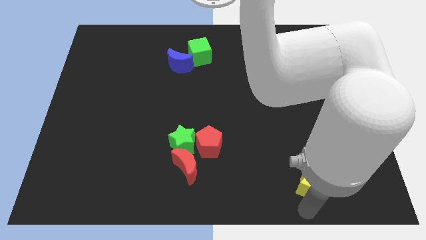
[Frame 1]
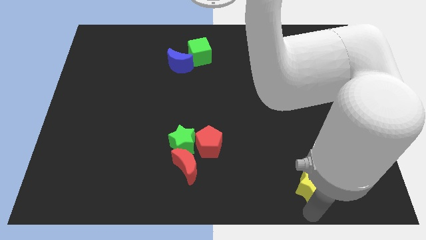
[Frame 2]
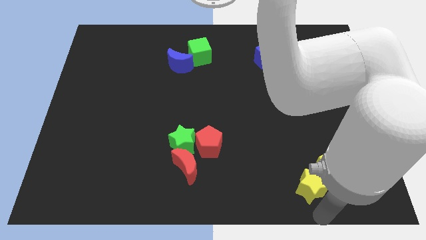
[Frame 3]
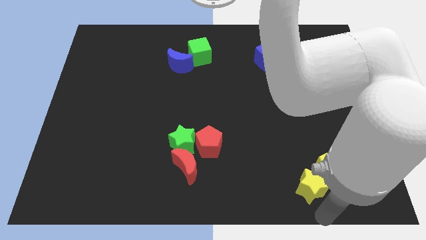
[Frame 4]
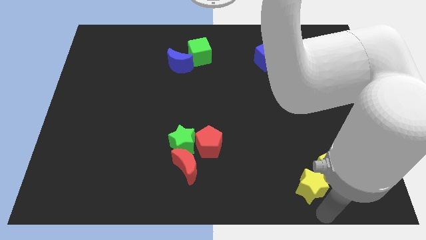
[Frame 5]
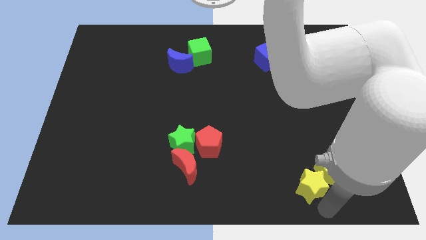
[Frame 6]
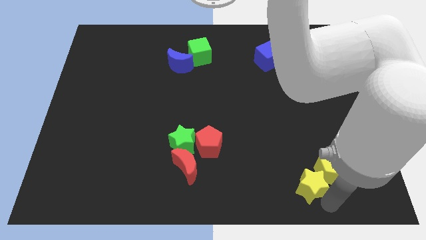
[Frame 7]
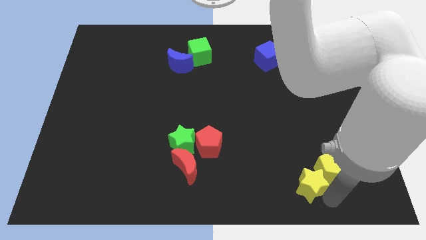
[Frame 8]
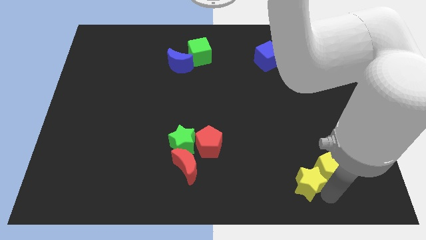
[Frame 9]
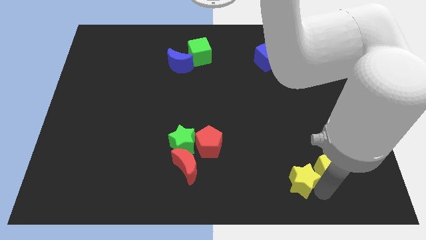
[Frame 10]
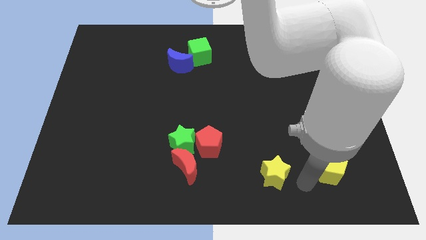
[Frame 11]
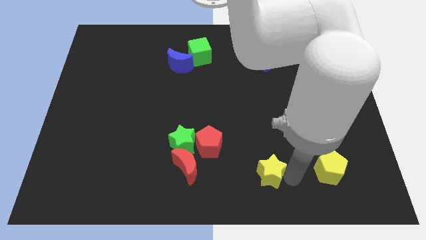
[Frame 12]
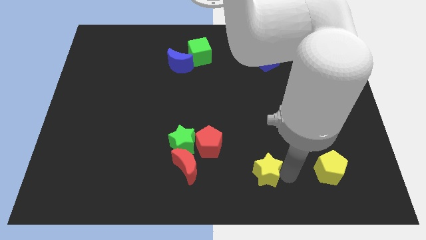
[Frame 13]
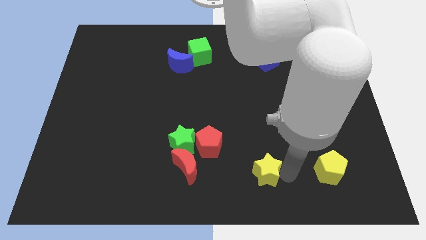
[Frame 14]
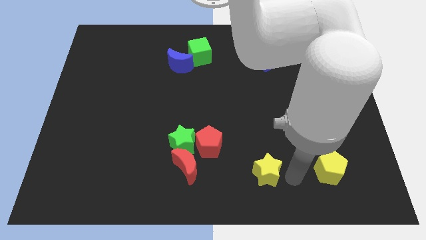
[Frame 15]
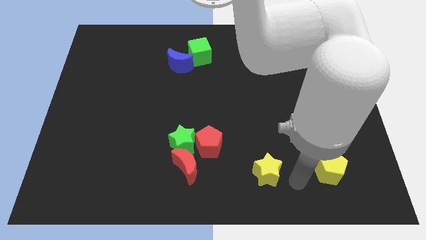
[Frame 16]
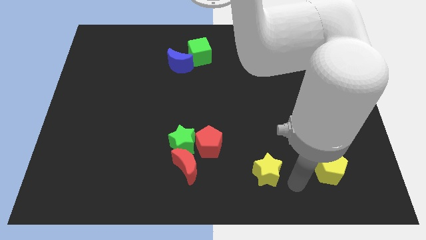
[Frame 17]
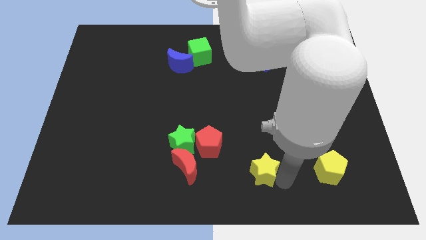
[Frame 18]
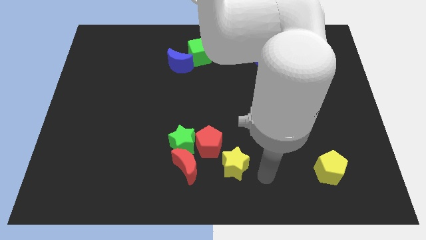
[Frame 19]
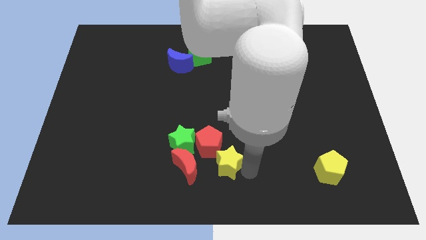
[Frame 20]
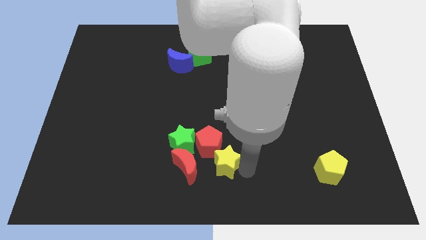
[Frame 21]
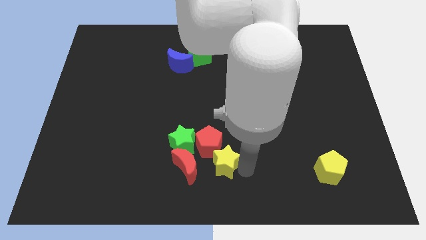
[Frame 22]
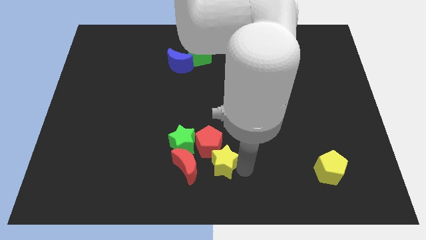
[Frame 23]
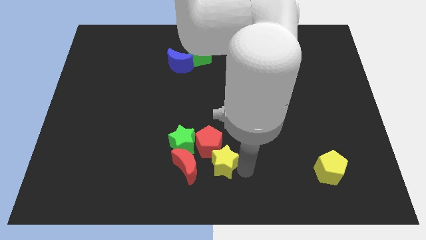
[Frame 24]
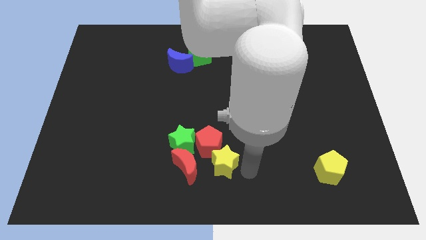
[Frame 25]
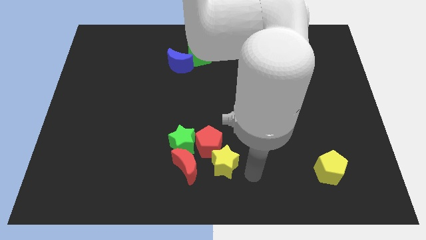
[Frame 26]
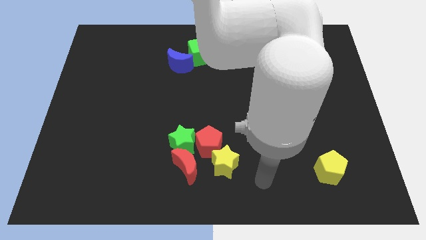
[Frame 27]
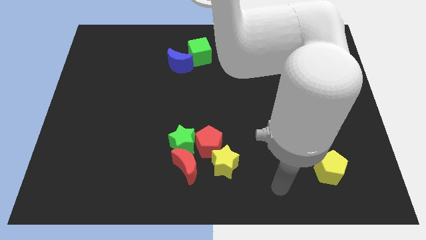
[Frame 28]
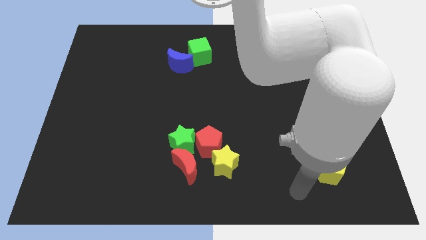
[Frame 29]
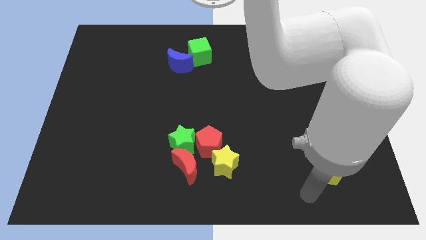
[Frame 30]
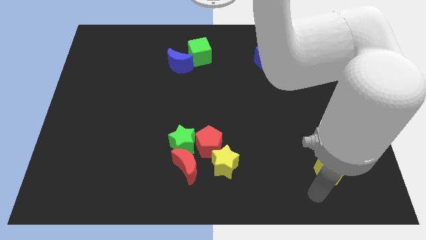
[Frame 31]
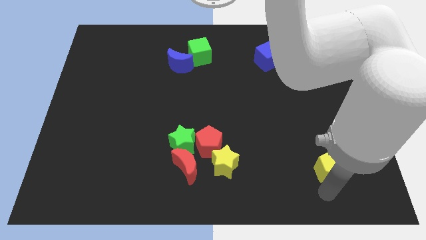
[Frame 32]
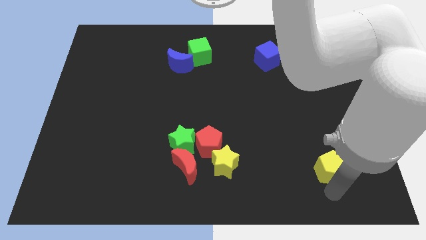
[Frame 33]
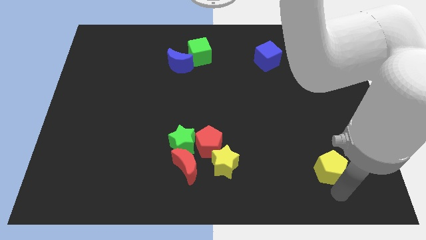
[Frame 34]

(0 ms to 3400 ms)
place the yellow star parallel to red moon

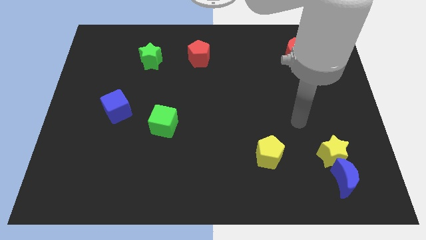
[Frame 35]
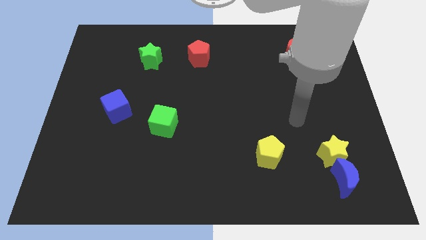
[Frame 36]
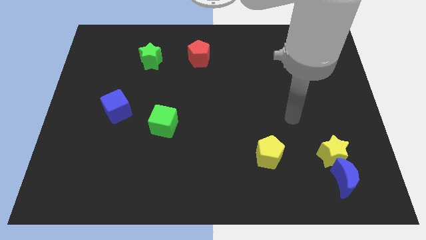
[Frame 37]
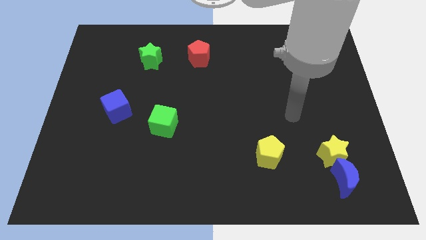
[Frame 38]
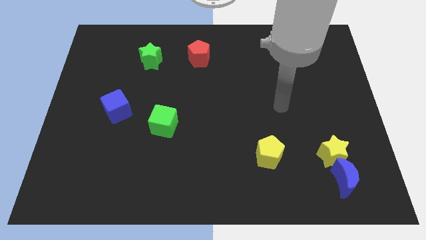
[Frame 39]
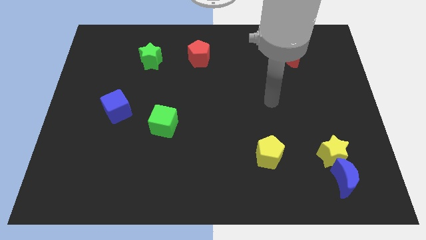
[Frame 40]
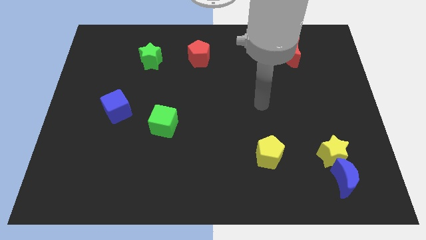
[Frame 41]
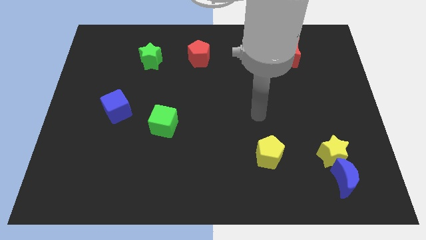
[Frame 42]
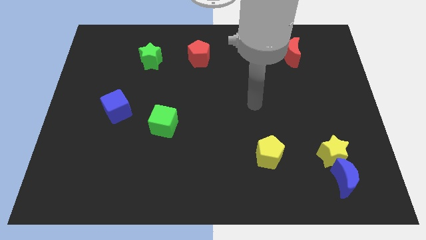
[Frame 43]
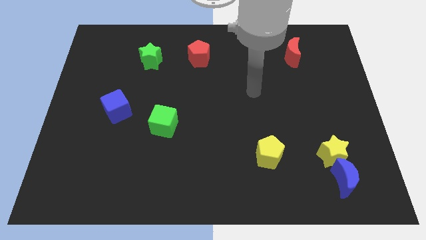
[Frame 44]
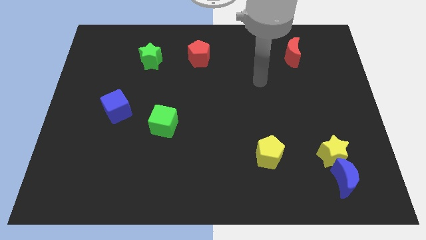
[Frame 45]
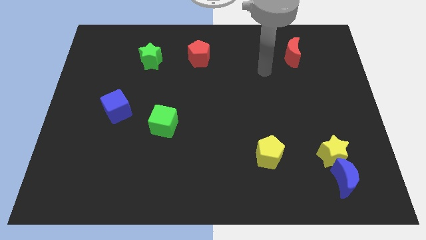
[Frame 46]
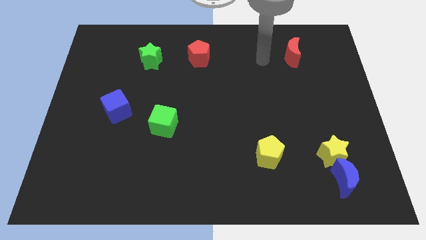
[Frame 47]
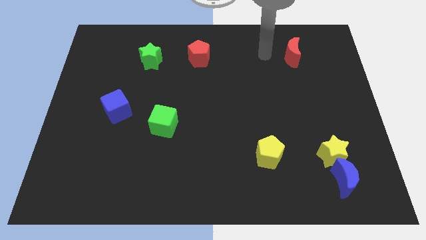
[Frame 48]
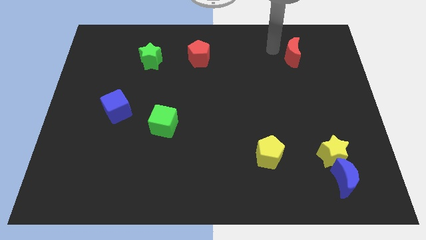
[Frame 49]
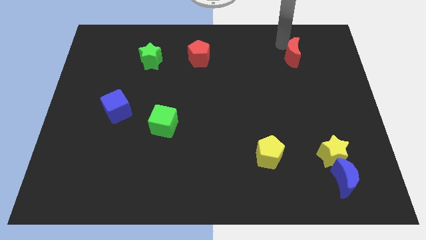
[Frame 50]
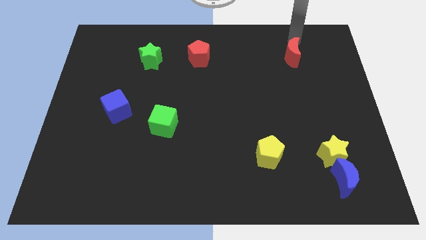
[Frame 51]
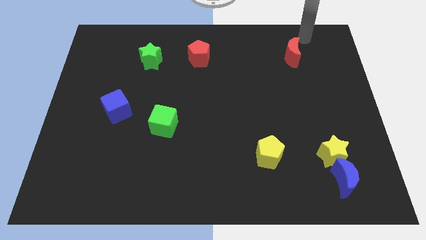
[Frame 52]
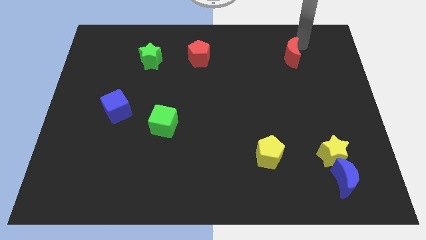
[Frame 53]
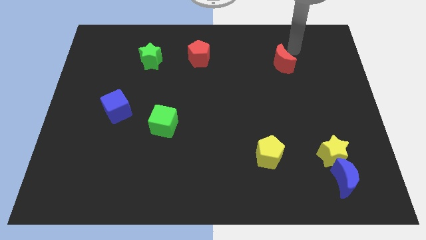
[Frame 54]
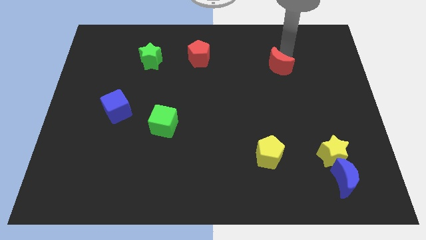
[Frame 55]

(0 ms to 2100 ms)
move the red crescent slightly to the down

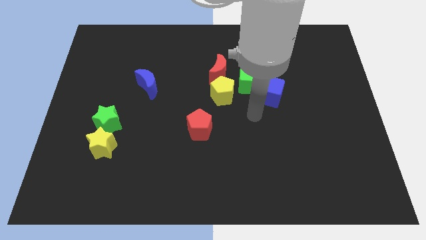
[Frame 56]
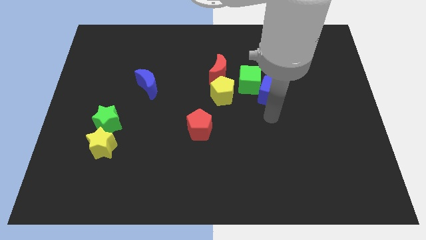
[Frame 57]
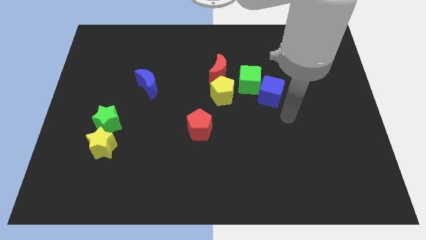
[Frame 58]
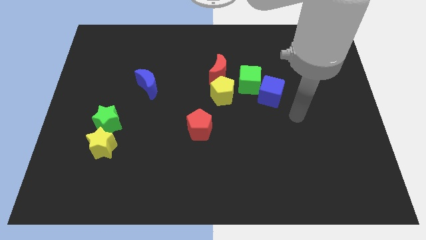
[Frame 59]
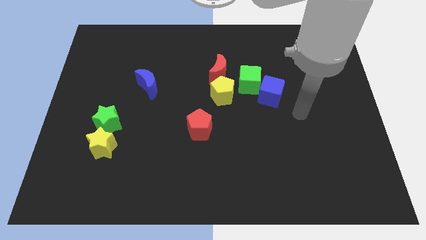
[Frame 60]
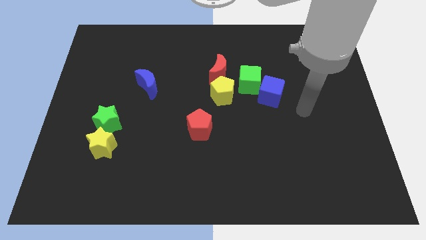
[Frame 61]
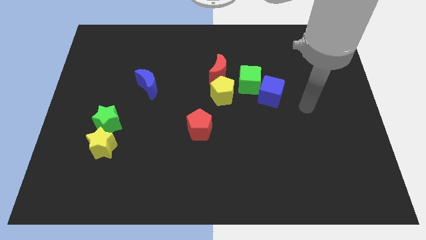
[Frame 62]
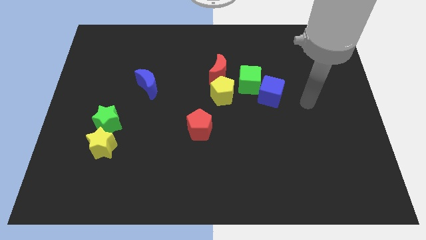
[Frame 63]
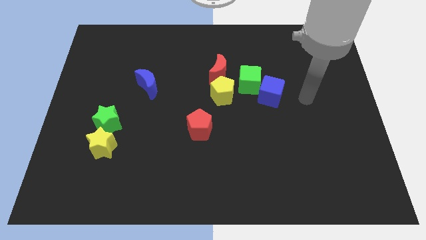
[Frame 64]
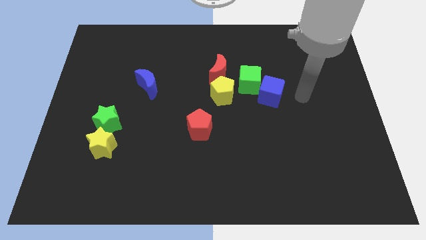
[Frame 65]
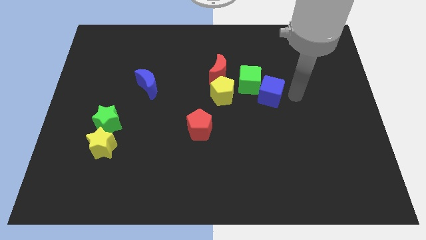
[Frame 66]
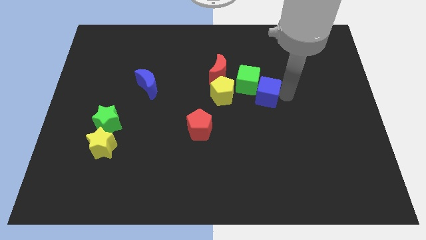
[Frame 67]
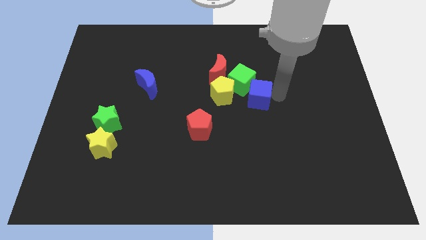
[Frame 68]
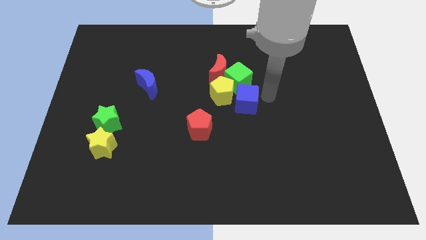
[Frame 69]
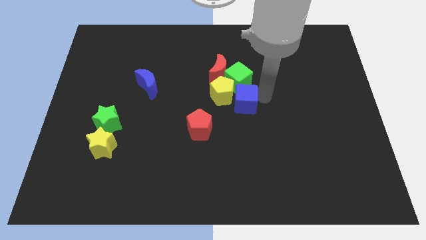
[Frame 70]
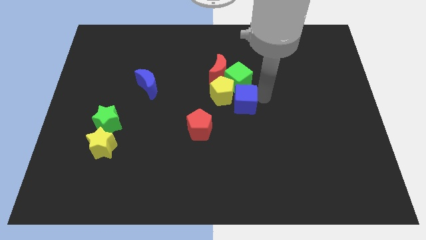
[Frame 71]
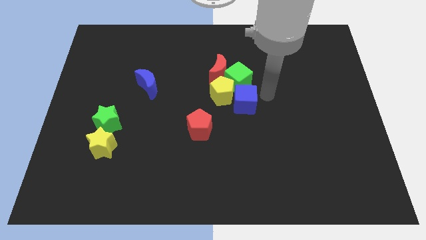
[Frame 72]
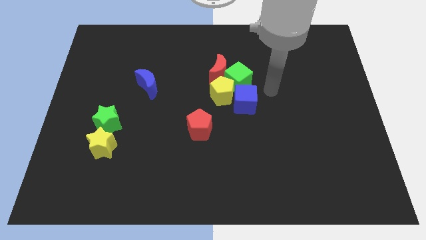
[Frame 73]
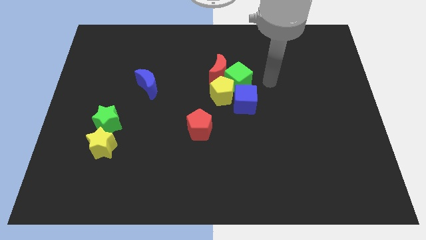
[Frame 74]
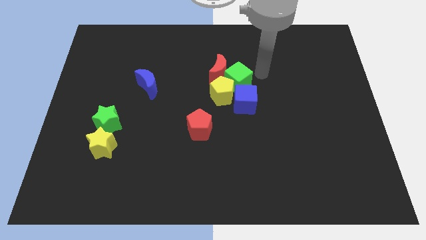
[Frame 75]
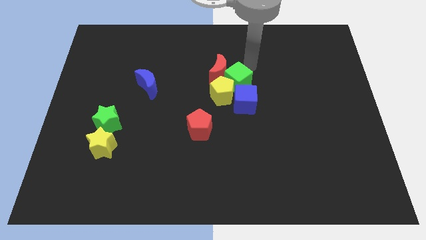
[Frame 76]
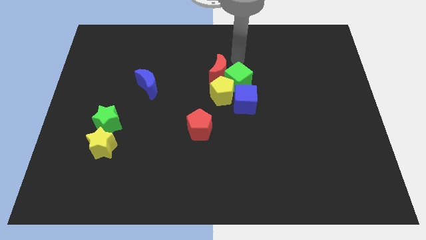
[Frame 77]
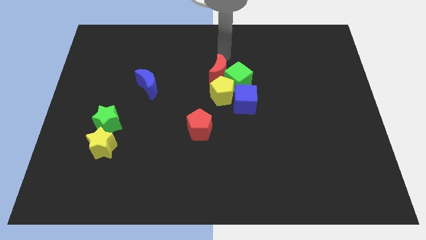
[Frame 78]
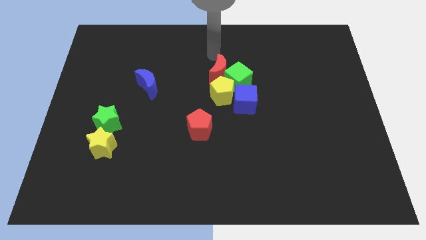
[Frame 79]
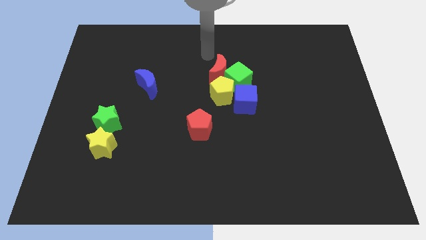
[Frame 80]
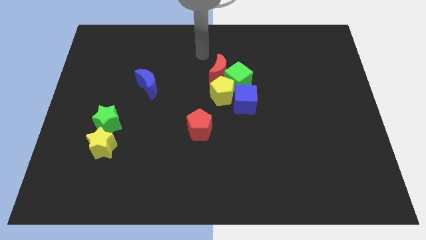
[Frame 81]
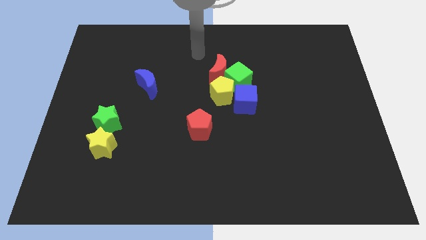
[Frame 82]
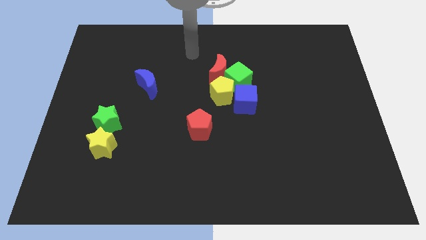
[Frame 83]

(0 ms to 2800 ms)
push the two cubes into the yellow pentagon

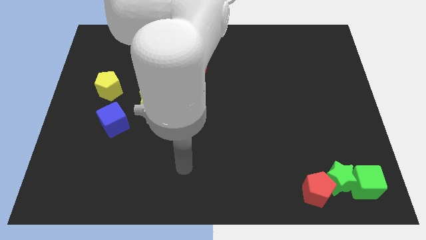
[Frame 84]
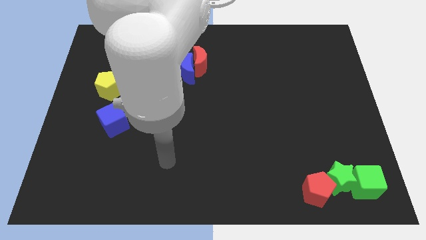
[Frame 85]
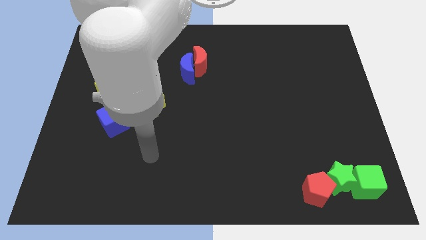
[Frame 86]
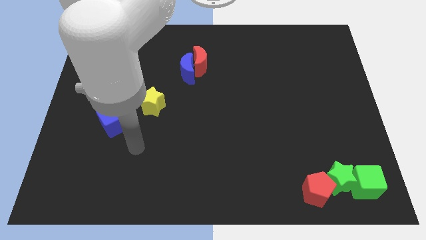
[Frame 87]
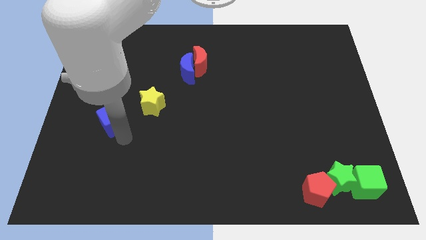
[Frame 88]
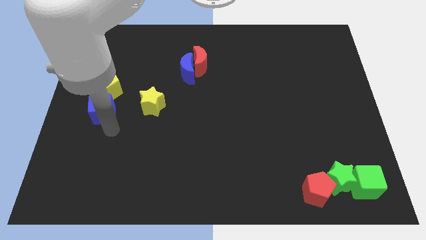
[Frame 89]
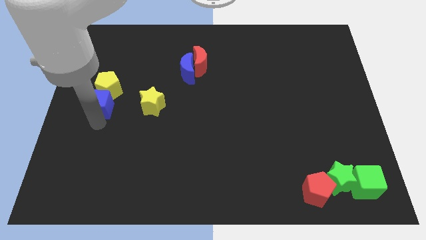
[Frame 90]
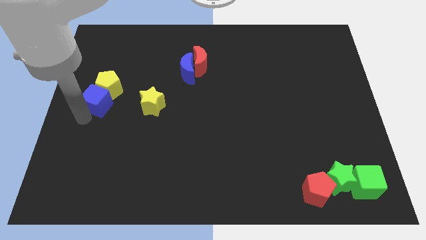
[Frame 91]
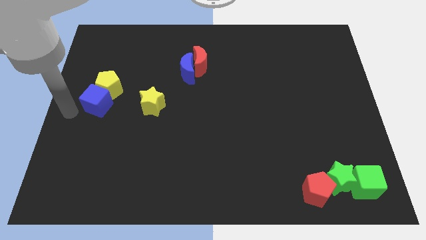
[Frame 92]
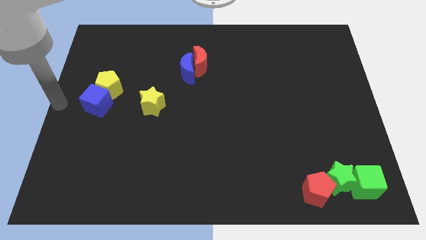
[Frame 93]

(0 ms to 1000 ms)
move the blue cube below the yellow pentagon
